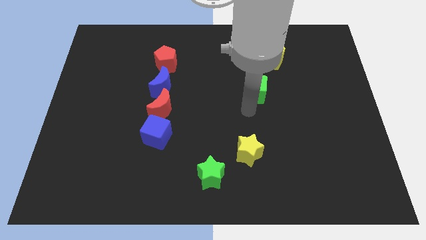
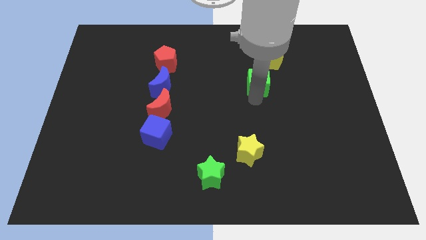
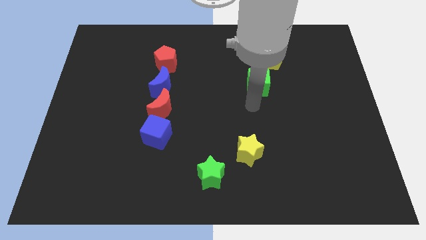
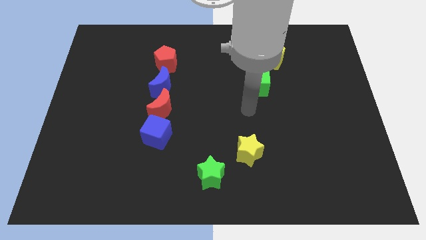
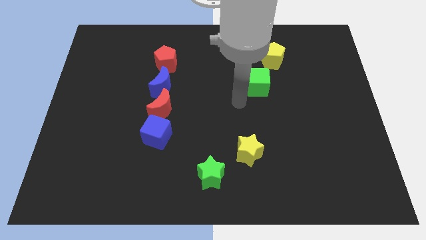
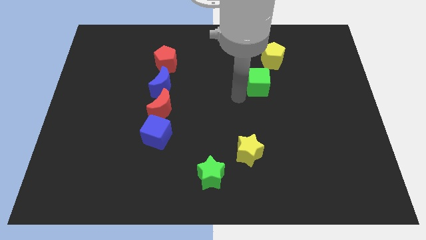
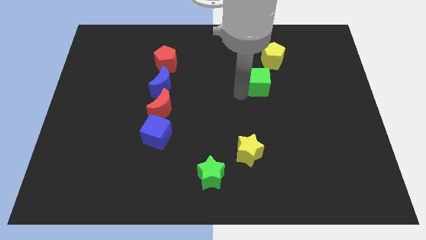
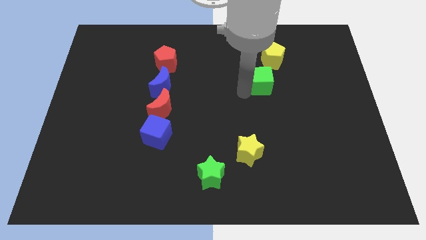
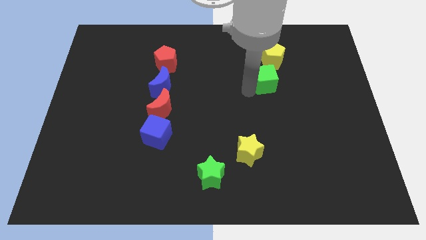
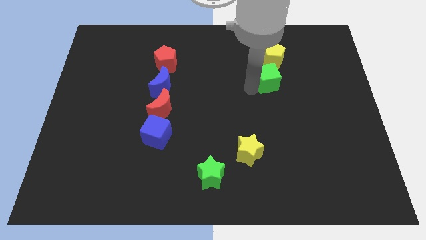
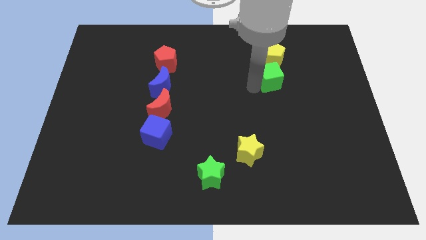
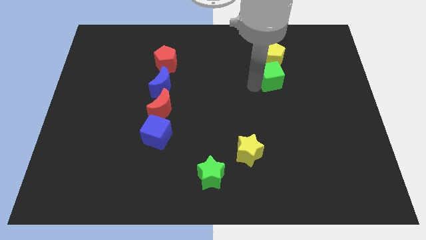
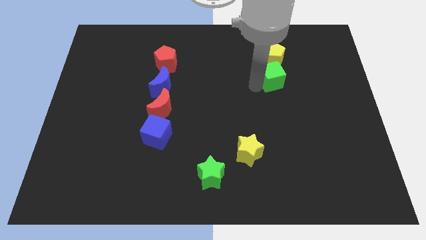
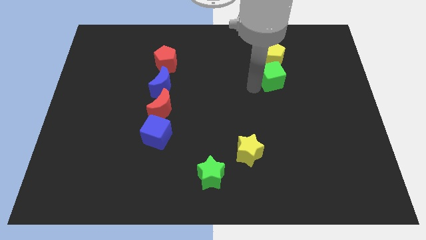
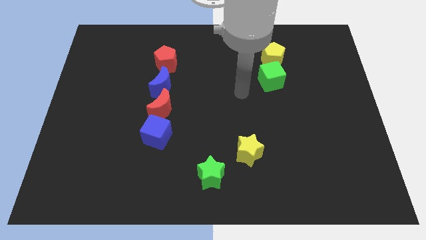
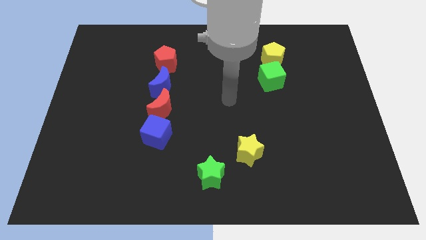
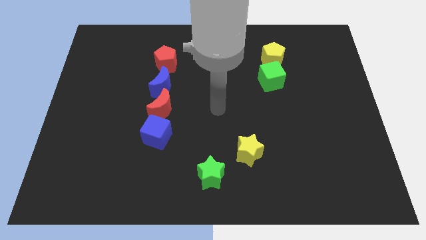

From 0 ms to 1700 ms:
push the green cube below the yellow pentagon

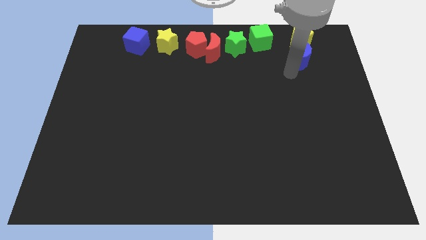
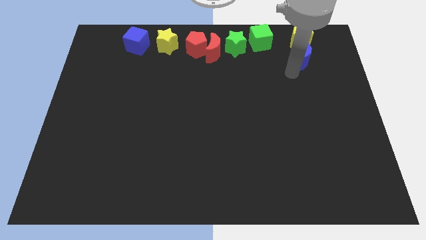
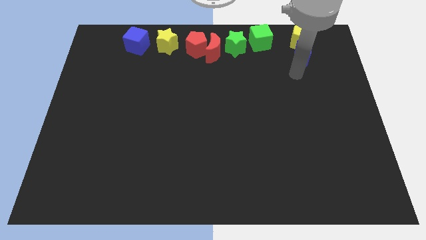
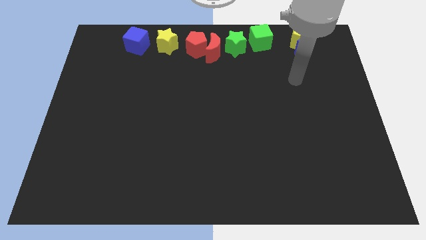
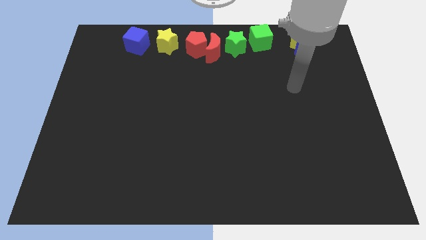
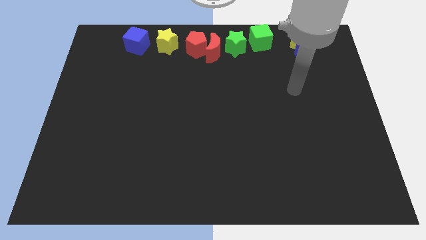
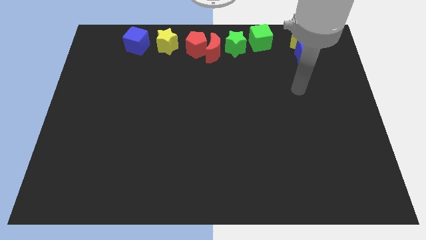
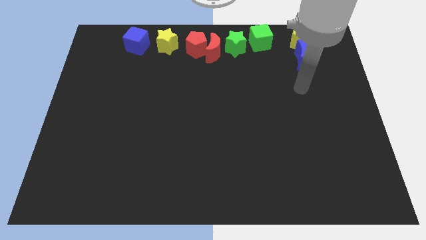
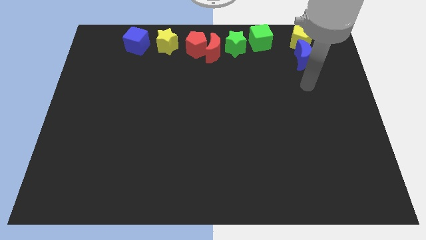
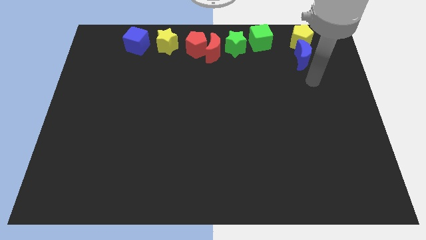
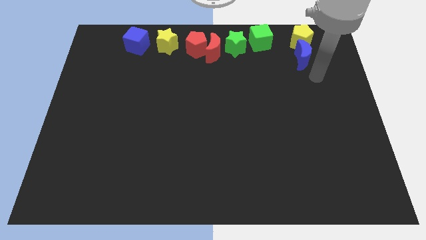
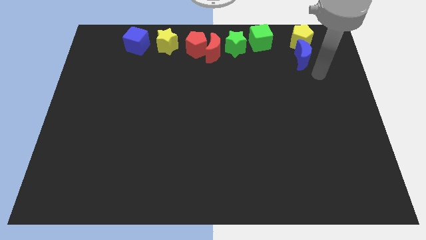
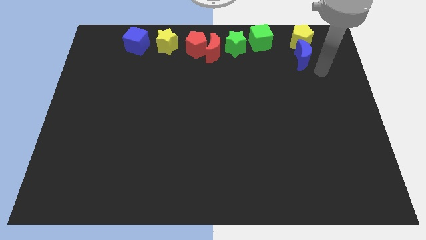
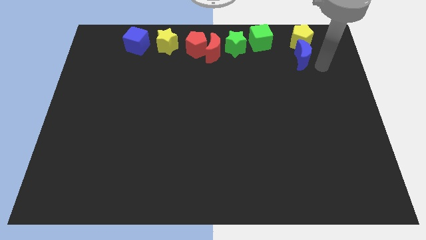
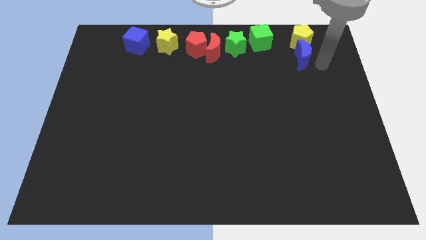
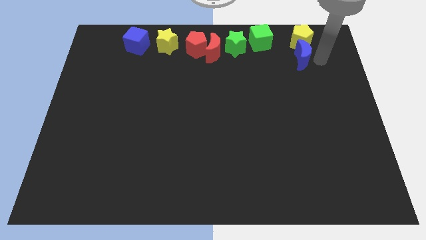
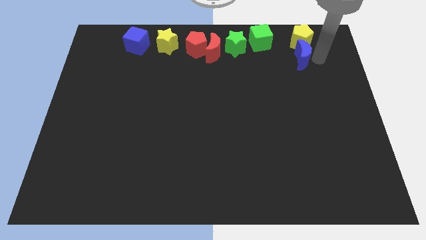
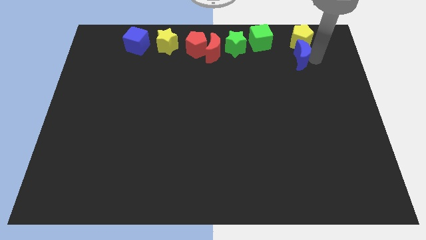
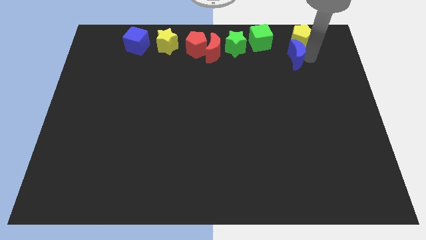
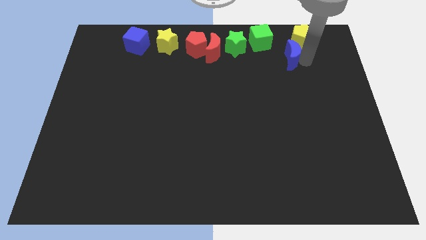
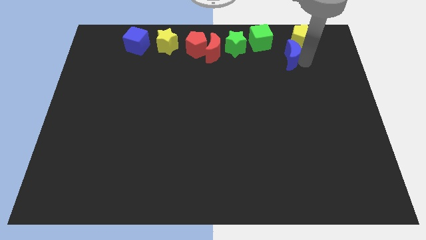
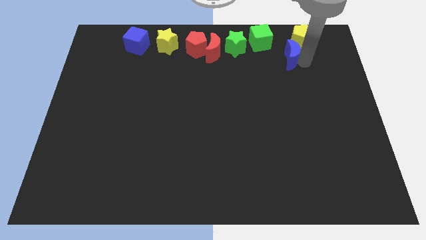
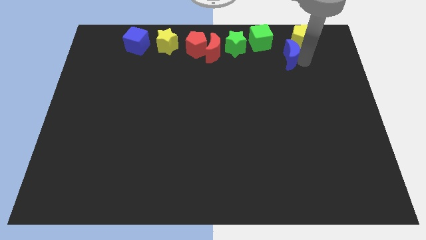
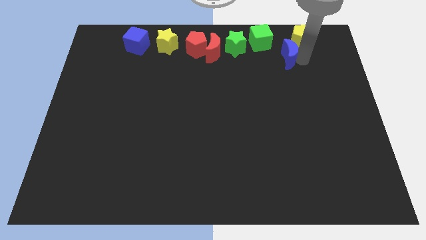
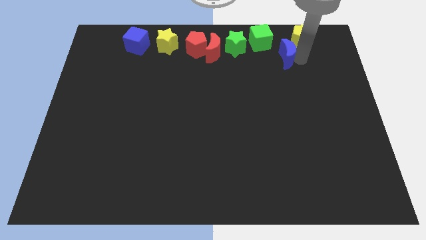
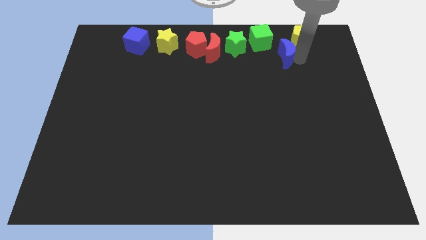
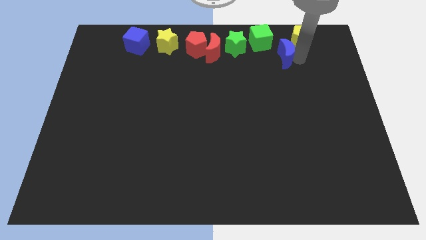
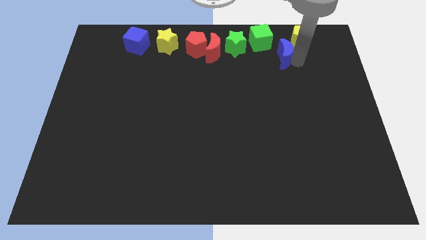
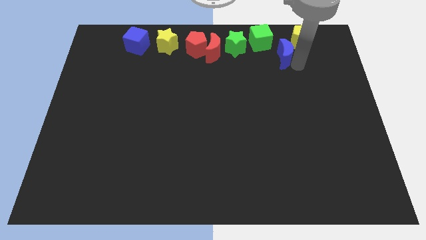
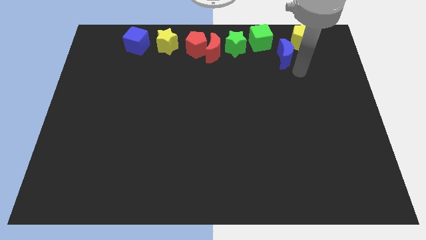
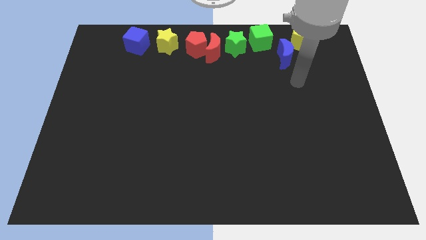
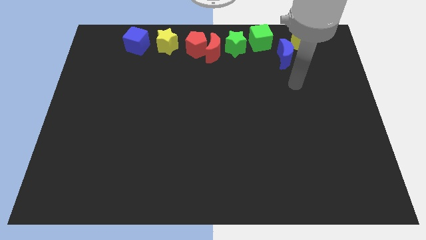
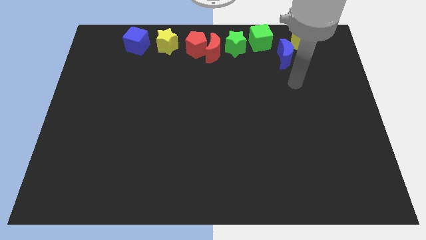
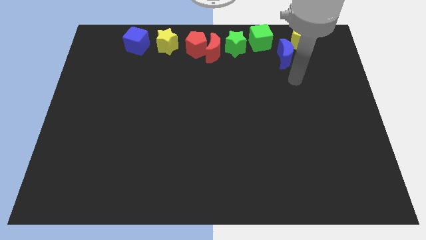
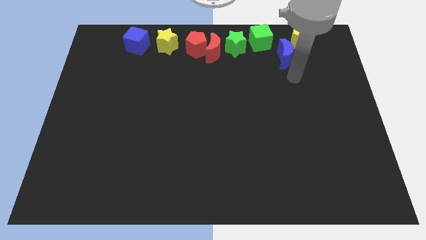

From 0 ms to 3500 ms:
move the blue moon to the bottom left of the yellow pentagon

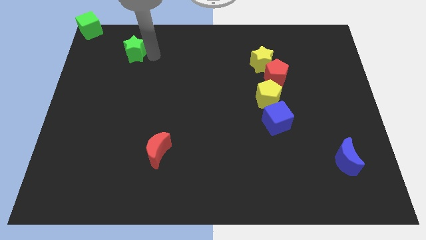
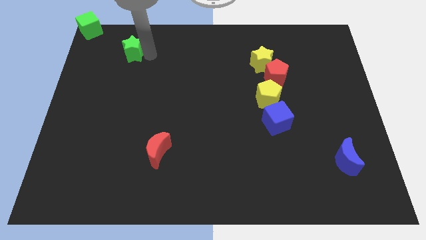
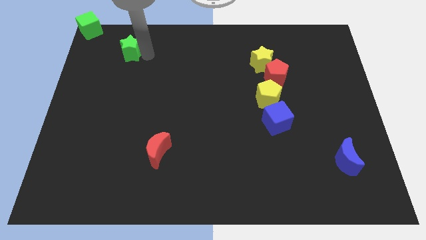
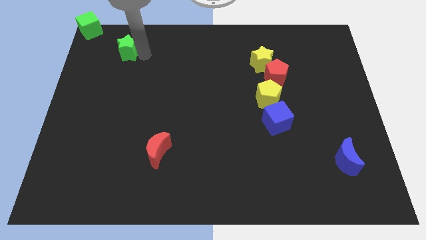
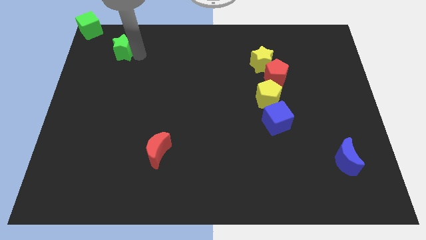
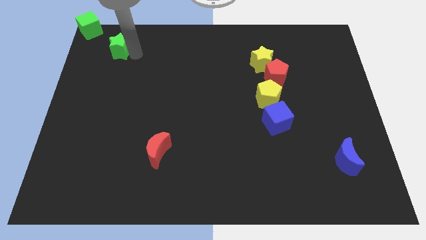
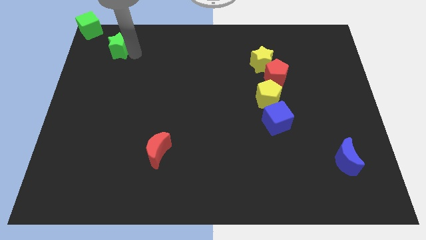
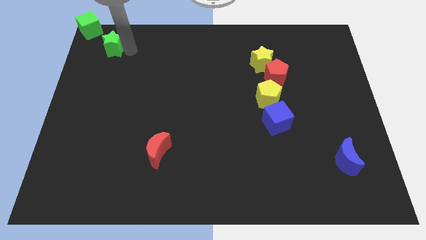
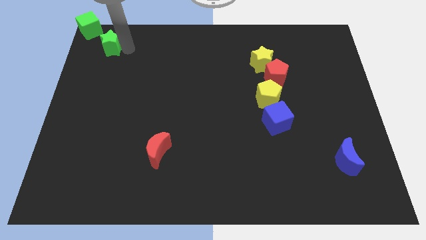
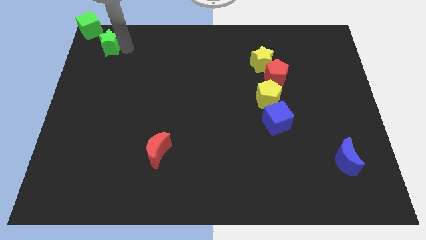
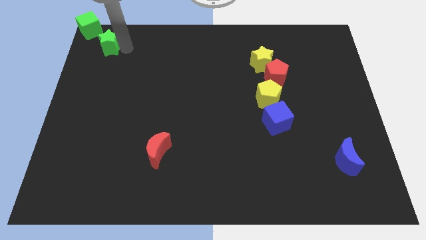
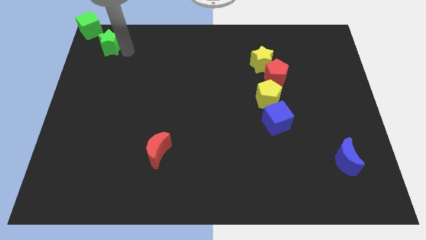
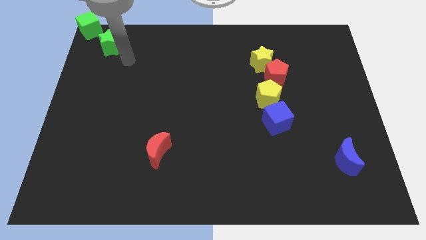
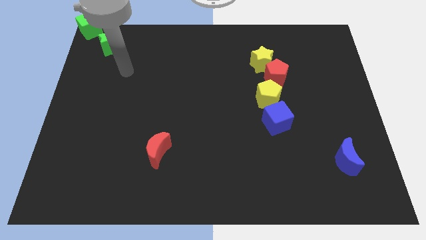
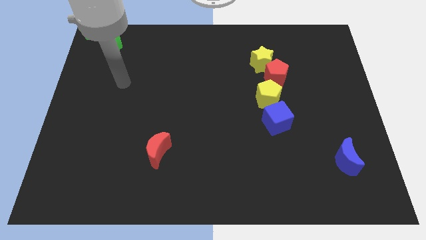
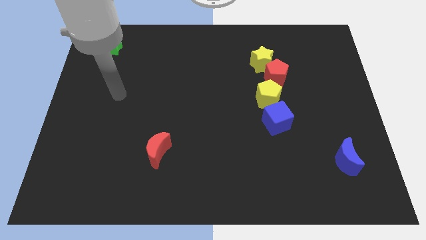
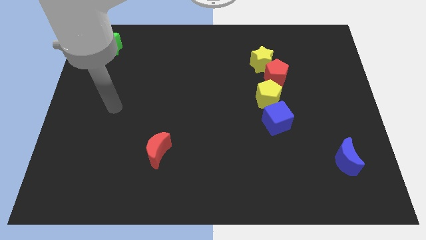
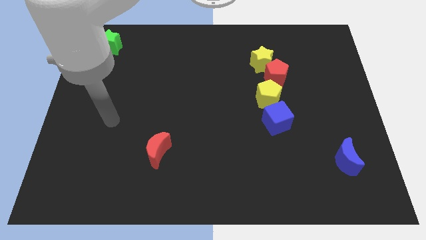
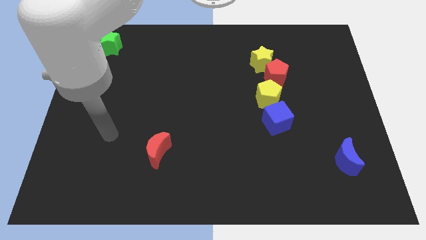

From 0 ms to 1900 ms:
move the green star close to the green cube

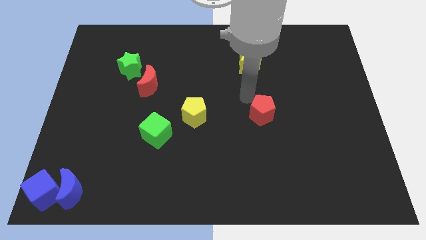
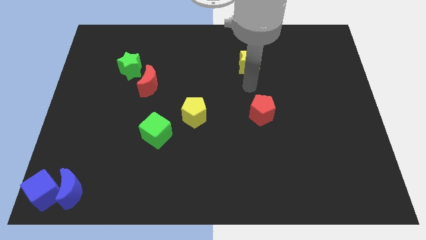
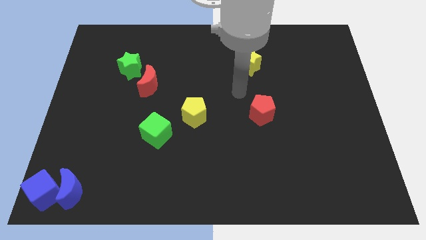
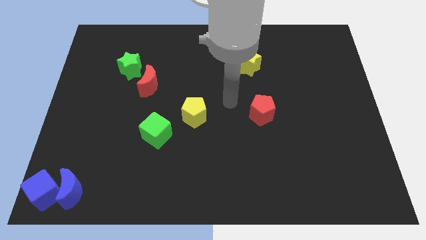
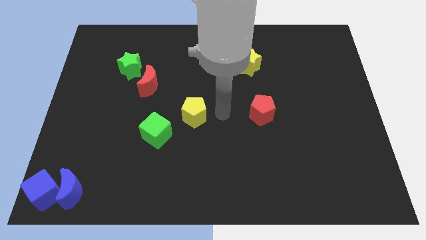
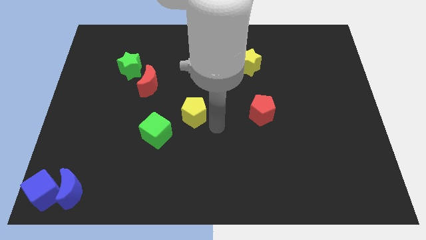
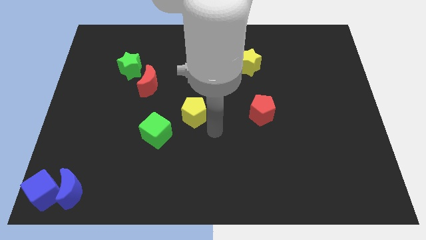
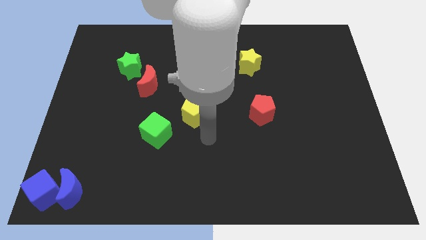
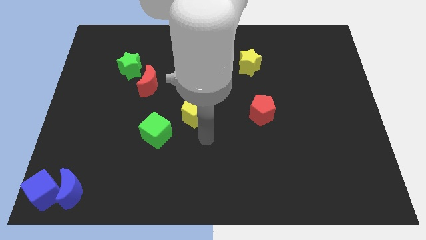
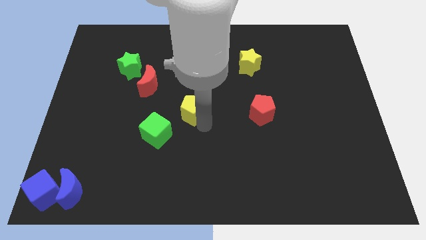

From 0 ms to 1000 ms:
move your arm towards the yellow pentagon

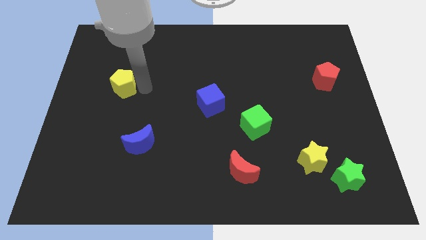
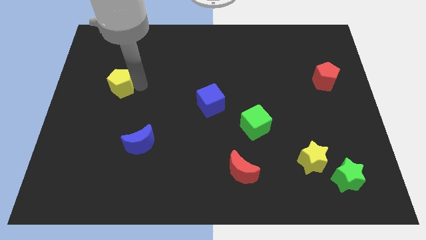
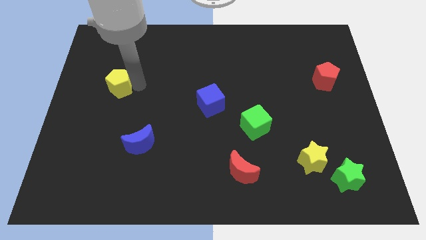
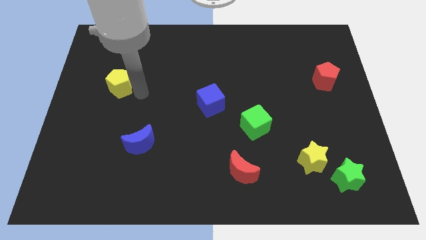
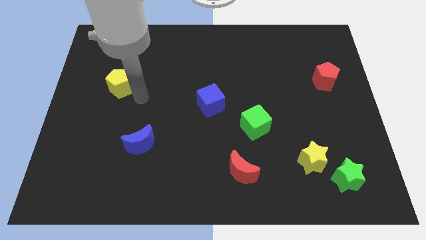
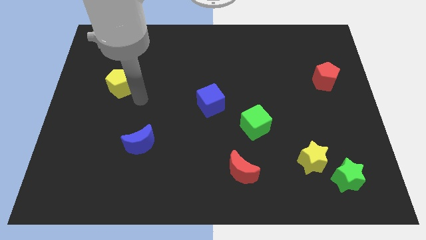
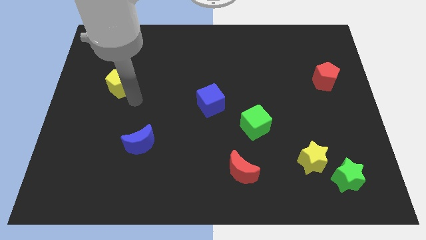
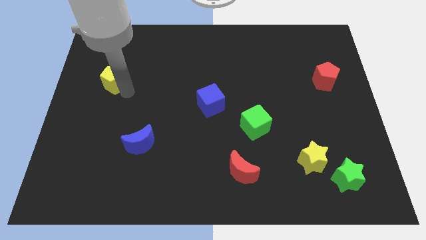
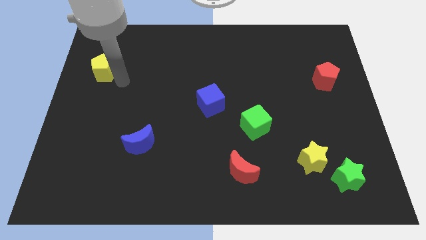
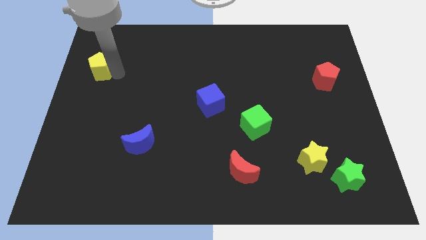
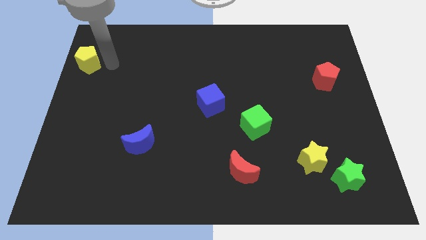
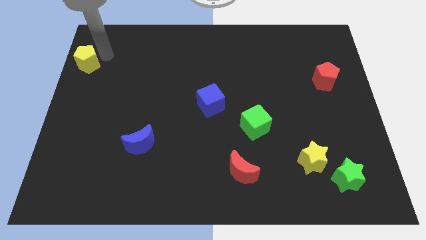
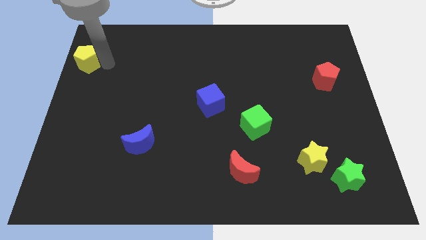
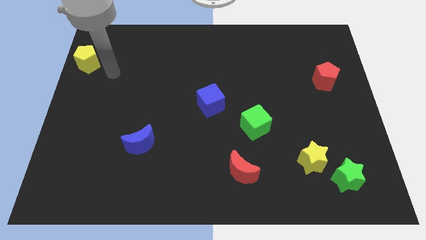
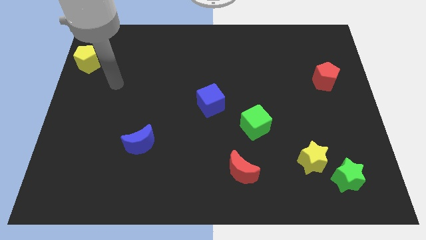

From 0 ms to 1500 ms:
place the yellow pentagon diagonally above the top left side of the blue crescent
